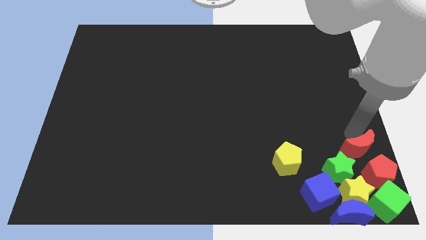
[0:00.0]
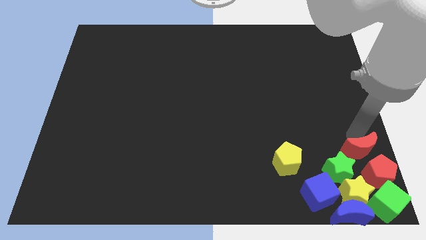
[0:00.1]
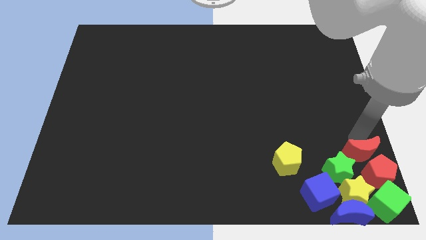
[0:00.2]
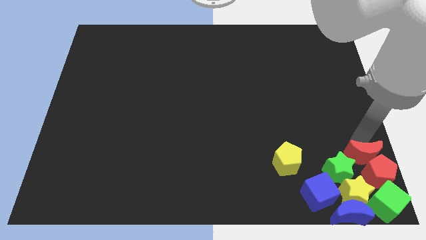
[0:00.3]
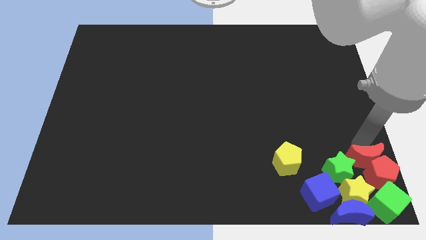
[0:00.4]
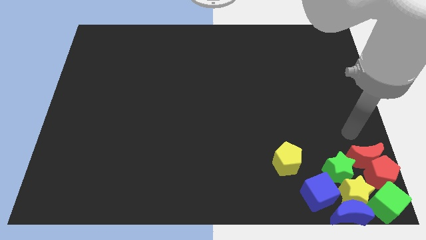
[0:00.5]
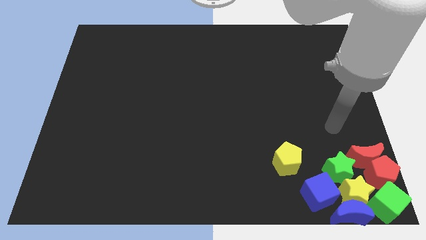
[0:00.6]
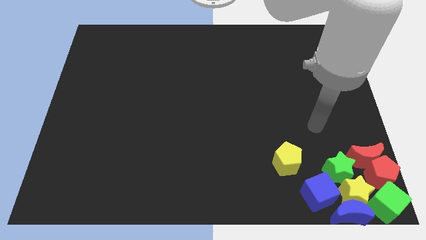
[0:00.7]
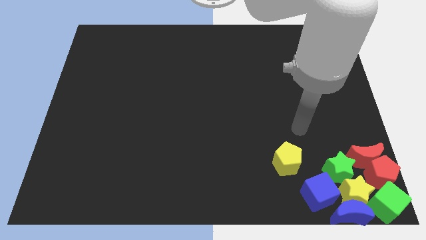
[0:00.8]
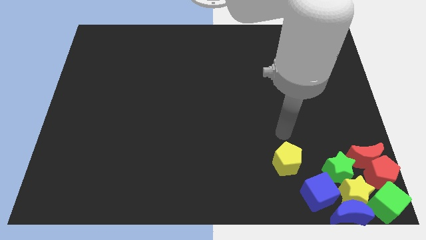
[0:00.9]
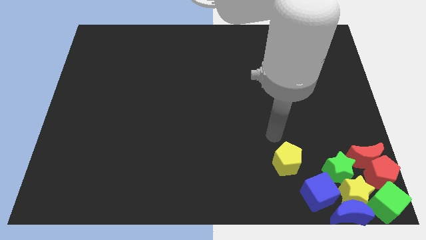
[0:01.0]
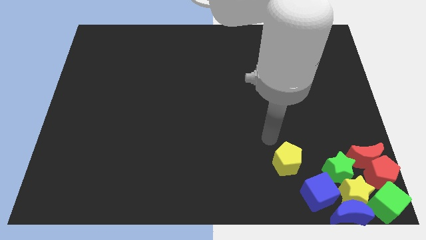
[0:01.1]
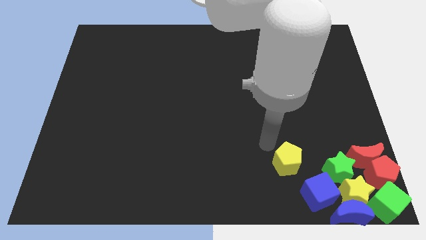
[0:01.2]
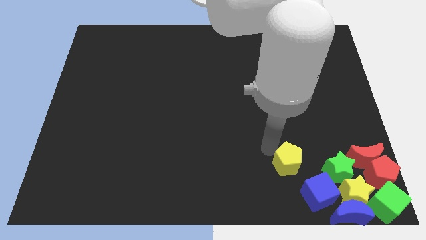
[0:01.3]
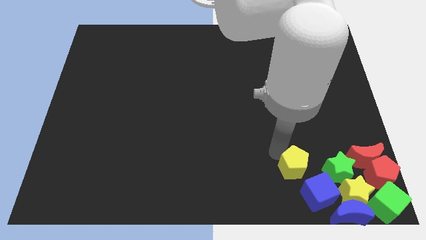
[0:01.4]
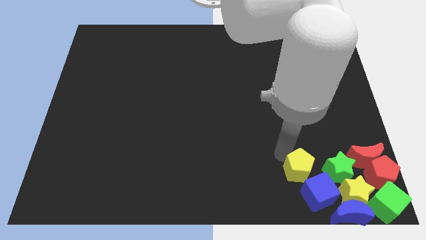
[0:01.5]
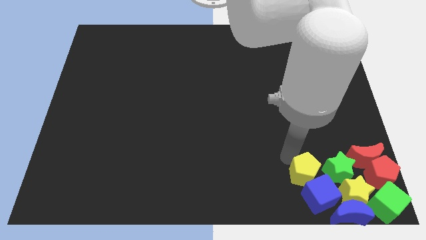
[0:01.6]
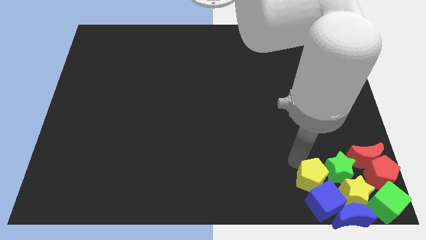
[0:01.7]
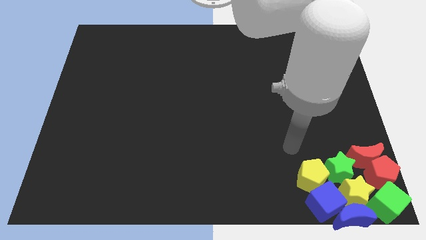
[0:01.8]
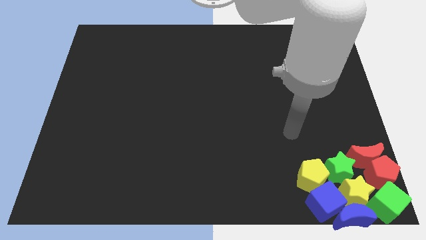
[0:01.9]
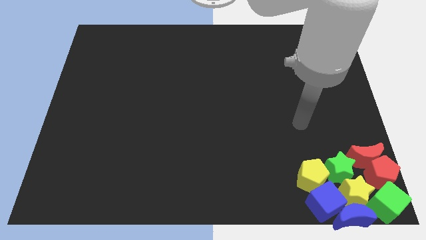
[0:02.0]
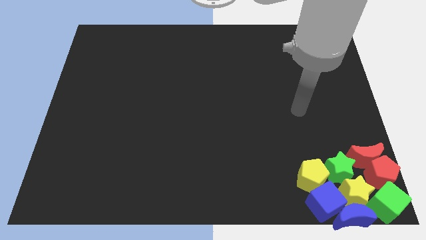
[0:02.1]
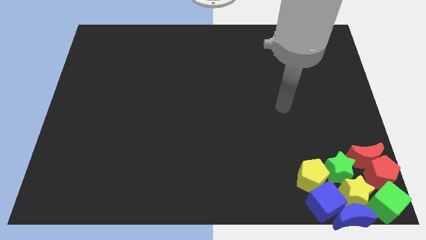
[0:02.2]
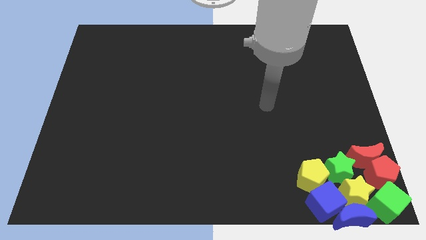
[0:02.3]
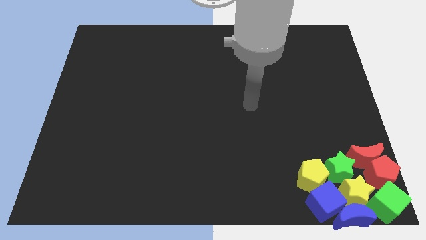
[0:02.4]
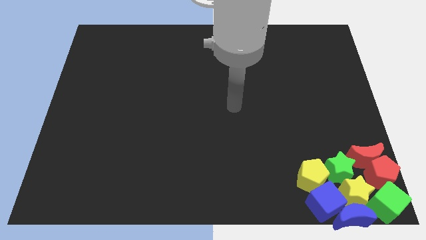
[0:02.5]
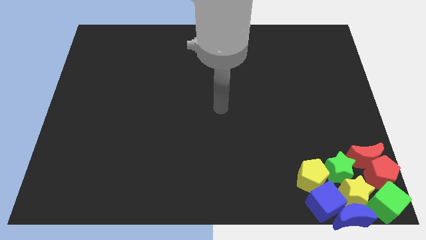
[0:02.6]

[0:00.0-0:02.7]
move the yellow pentagon to the top left of the blue cube

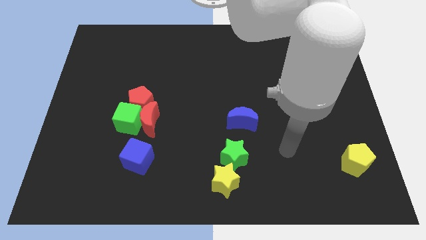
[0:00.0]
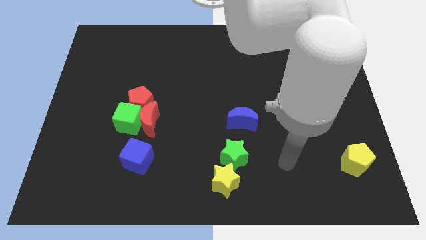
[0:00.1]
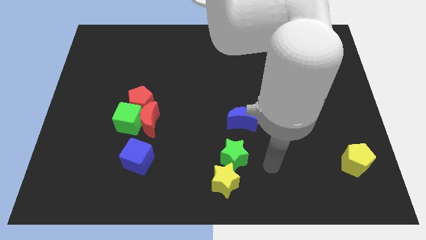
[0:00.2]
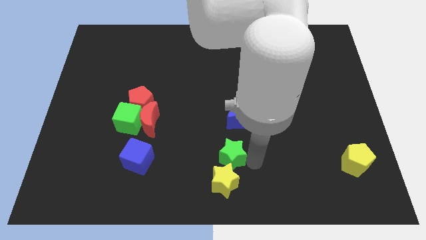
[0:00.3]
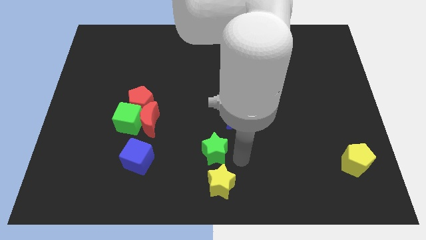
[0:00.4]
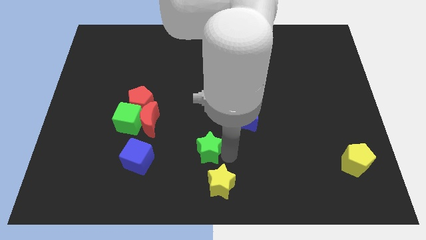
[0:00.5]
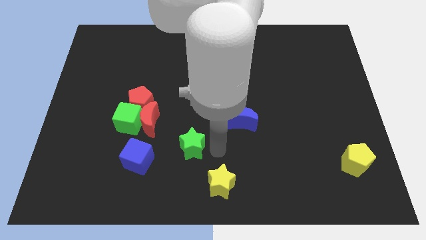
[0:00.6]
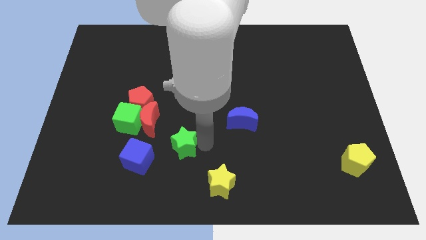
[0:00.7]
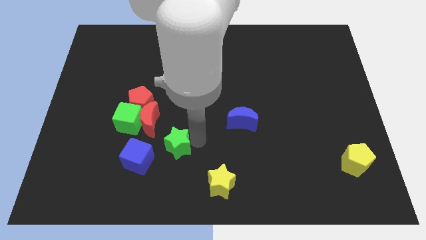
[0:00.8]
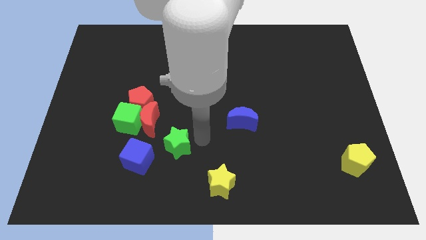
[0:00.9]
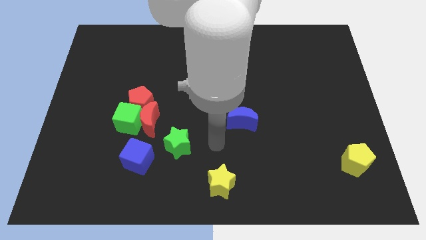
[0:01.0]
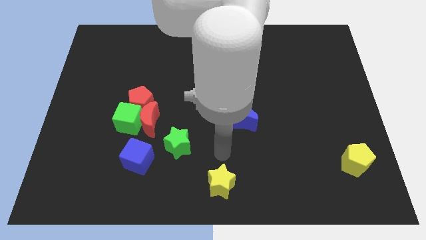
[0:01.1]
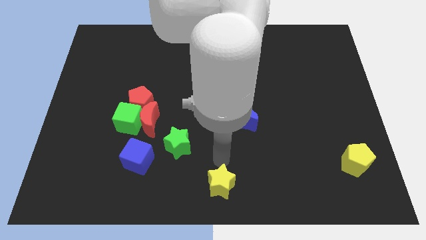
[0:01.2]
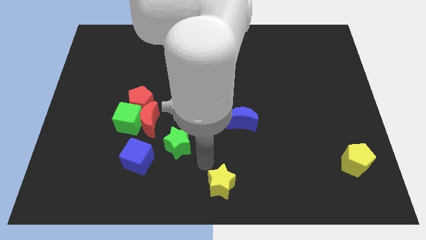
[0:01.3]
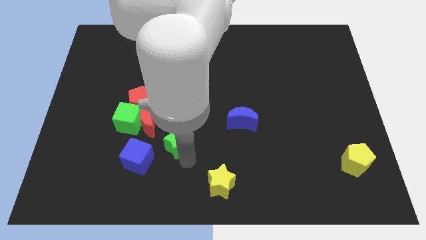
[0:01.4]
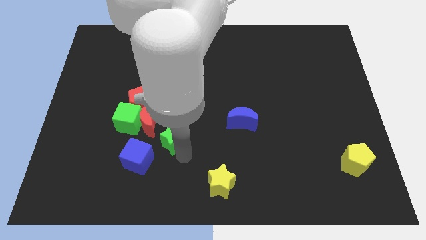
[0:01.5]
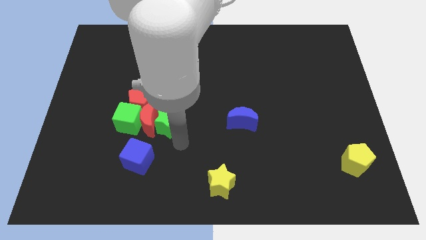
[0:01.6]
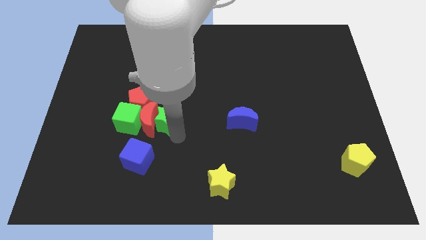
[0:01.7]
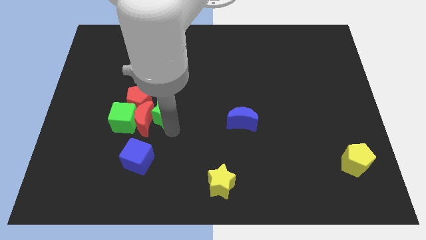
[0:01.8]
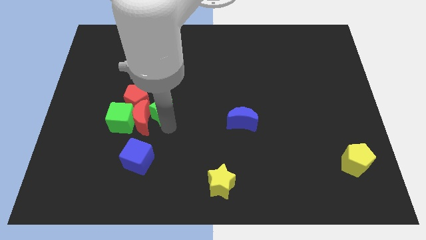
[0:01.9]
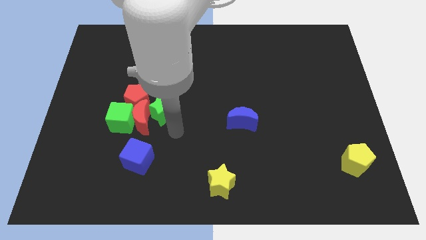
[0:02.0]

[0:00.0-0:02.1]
move green star to the right of red moon

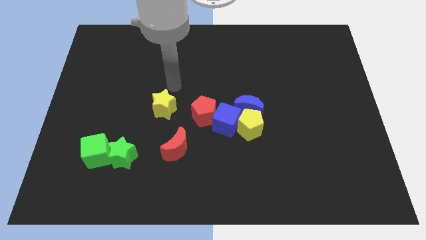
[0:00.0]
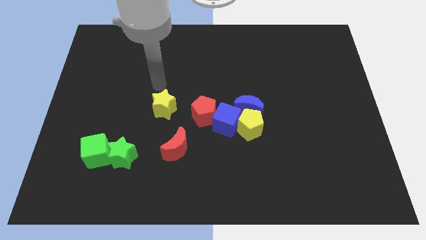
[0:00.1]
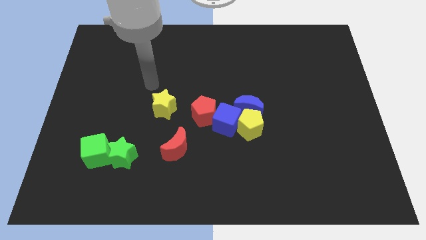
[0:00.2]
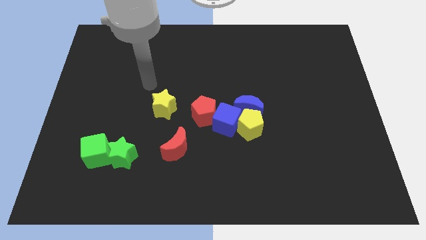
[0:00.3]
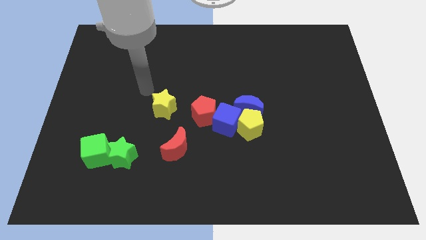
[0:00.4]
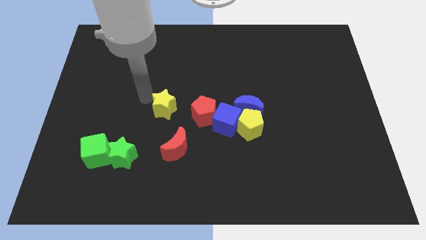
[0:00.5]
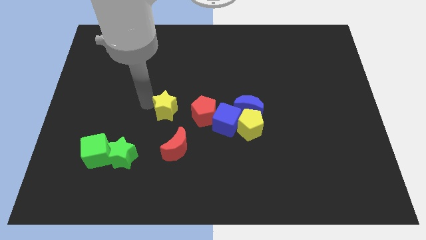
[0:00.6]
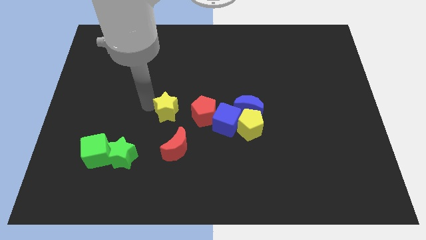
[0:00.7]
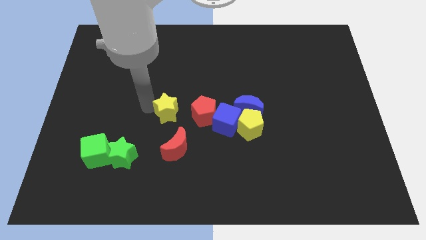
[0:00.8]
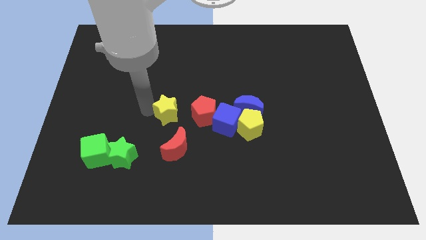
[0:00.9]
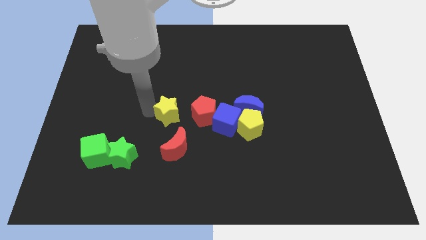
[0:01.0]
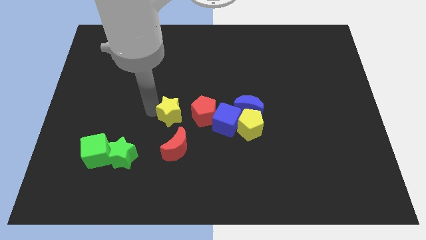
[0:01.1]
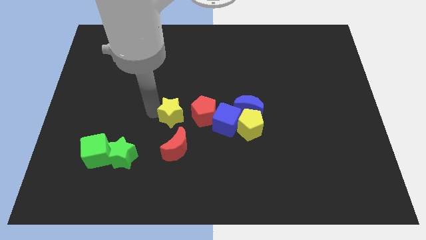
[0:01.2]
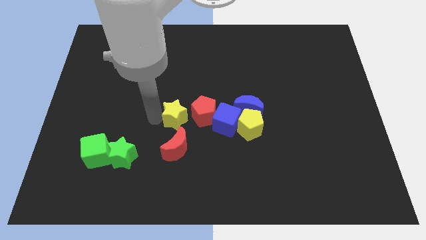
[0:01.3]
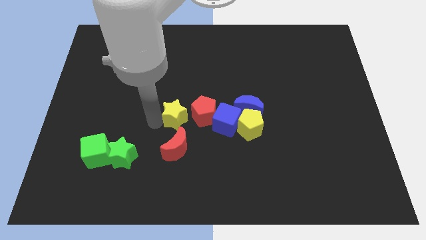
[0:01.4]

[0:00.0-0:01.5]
push yellow star close to the red pentagon

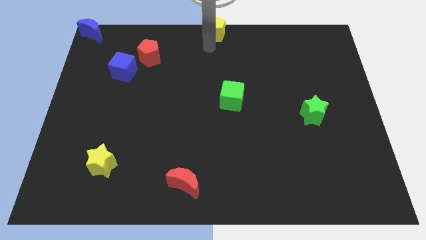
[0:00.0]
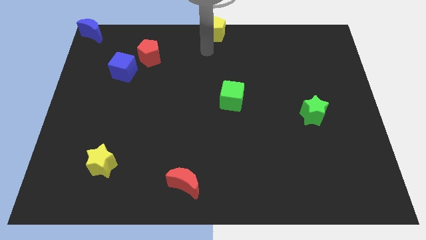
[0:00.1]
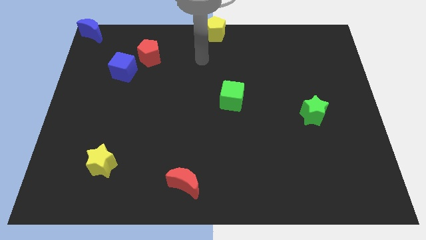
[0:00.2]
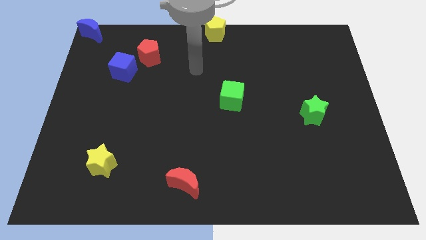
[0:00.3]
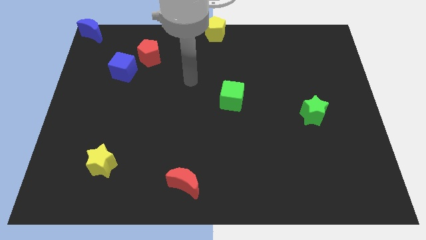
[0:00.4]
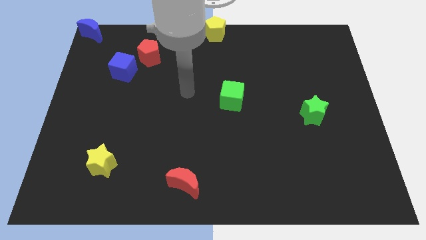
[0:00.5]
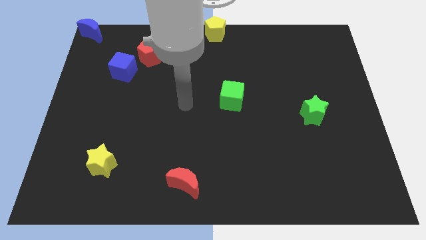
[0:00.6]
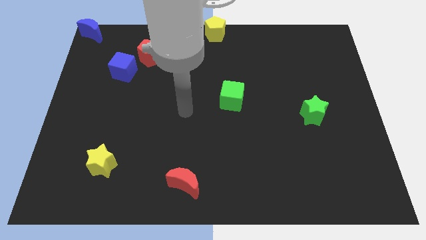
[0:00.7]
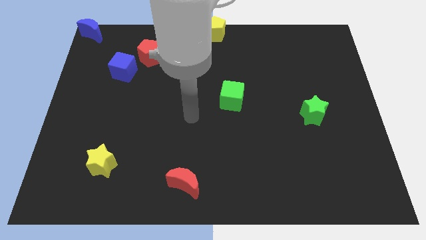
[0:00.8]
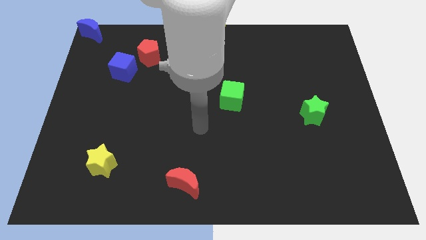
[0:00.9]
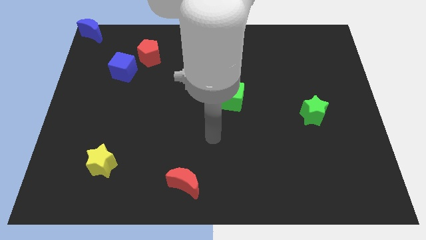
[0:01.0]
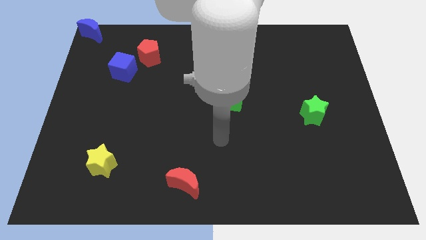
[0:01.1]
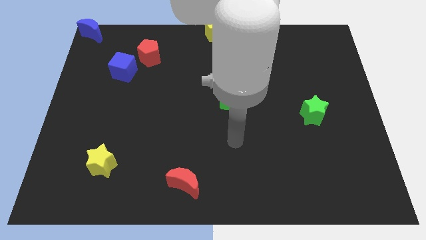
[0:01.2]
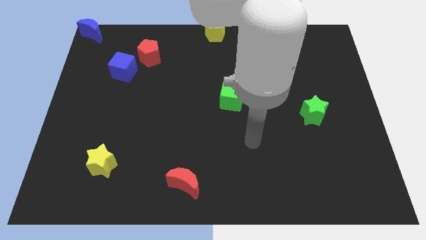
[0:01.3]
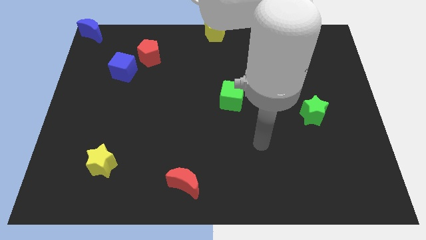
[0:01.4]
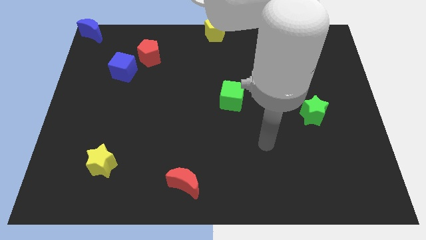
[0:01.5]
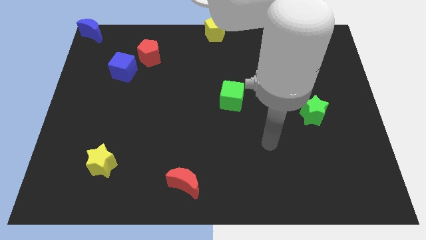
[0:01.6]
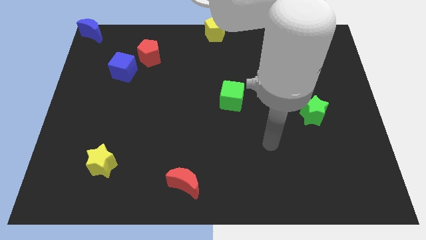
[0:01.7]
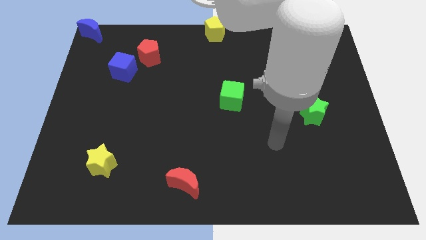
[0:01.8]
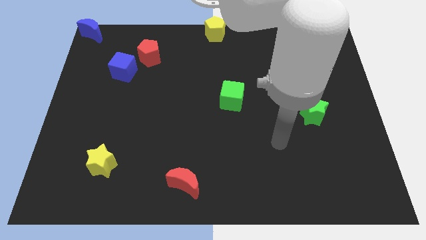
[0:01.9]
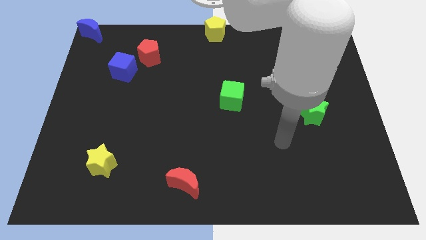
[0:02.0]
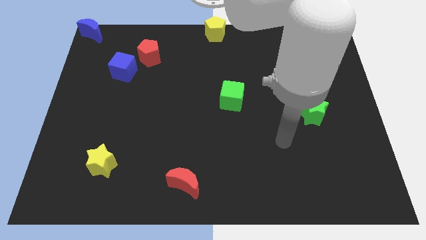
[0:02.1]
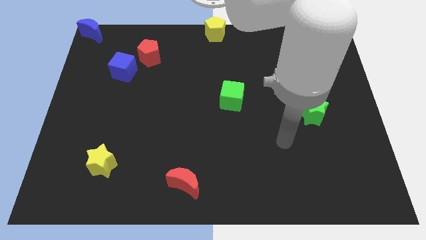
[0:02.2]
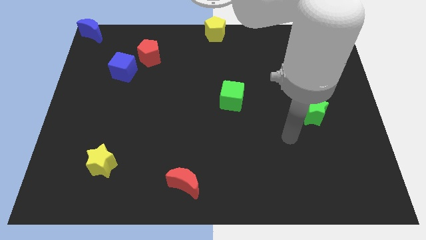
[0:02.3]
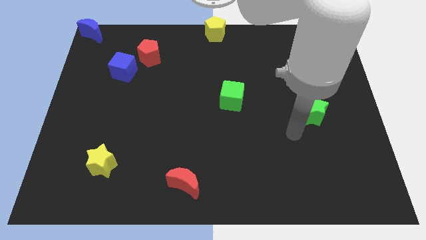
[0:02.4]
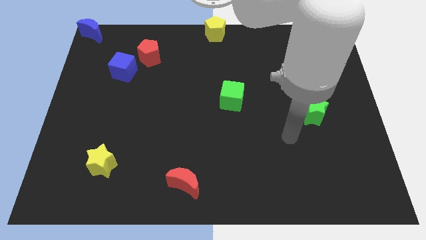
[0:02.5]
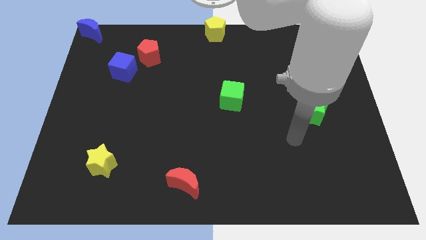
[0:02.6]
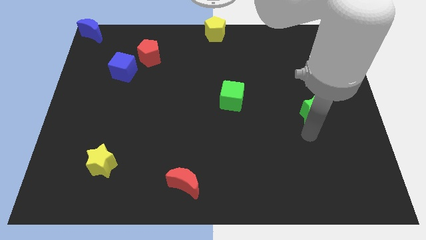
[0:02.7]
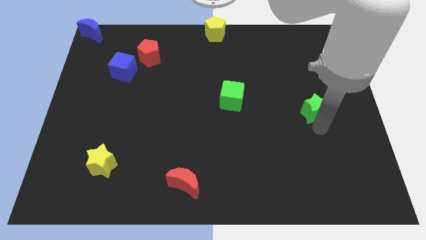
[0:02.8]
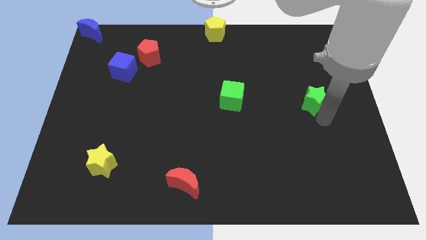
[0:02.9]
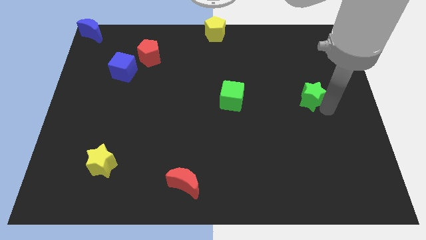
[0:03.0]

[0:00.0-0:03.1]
go near the green star
